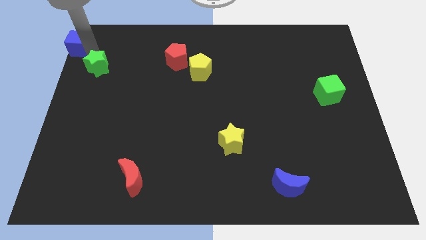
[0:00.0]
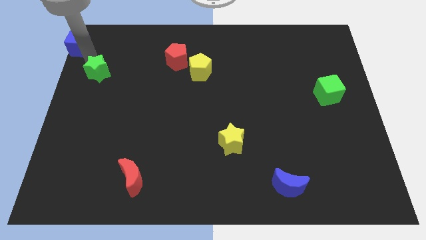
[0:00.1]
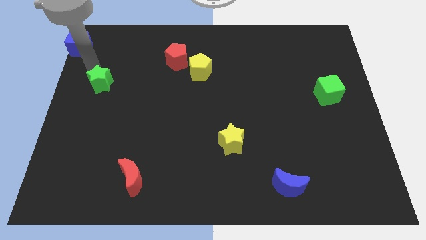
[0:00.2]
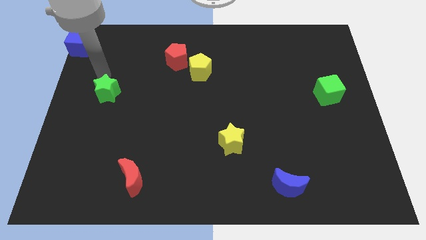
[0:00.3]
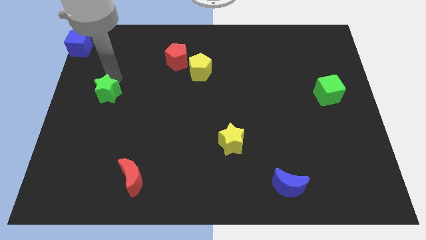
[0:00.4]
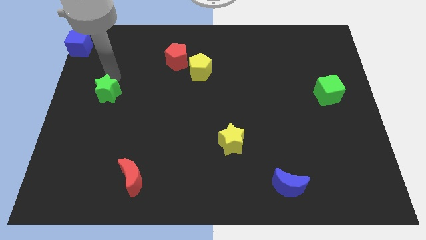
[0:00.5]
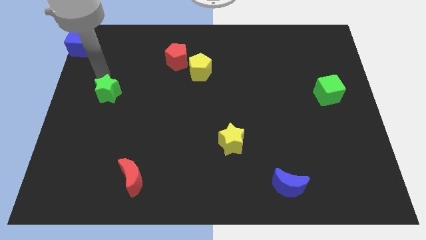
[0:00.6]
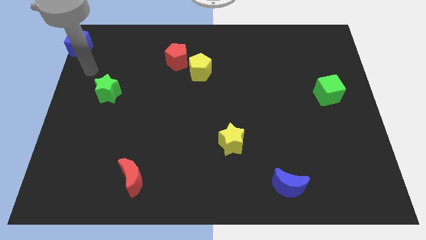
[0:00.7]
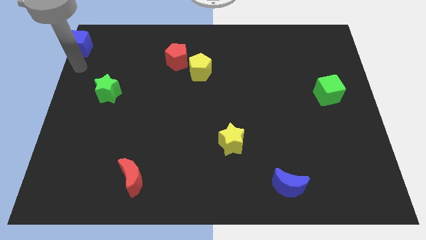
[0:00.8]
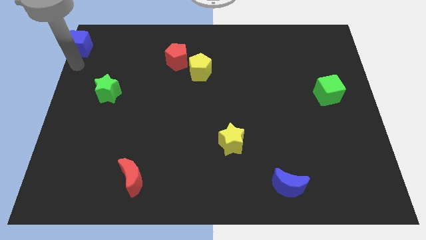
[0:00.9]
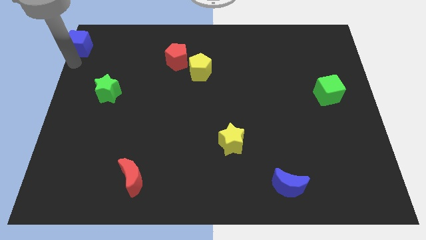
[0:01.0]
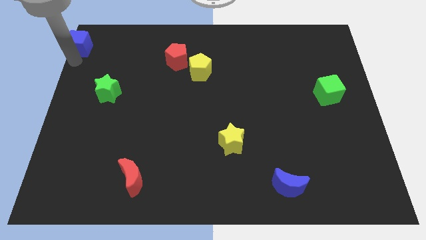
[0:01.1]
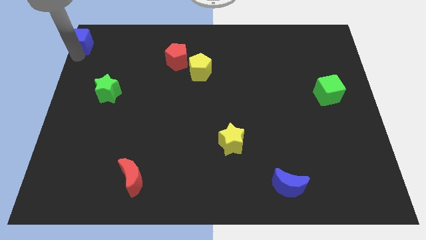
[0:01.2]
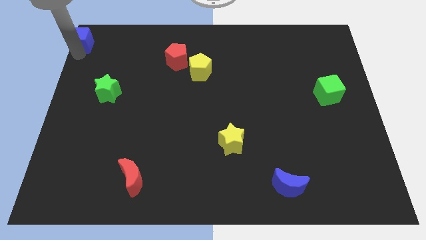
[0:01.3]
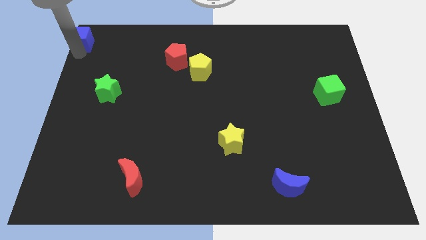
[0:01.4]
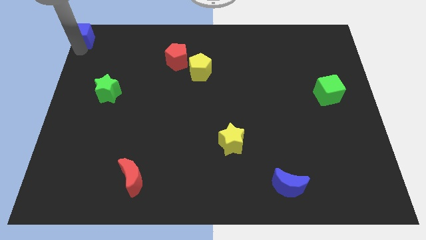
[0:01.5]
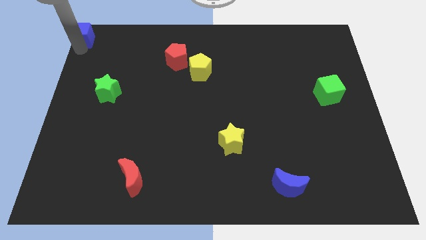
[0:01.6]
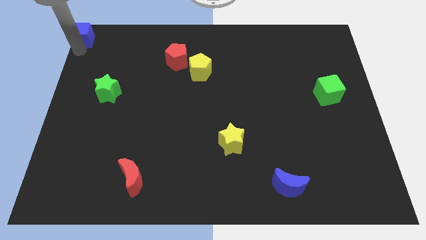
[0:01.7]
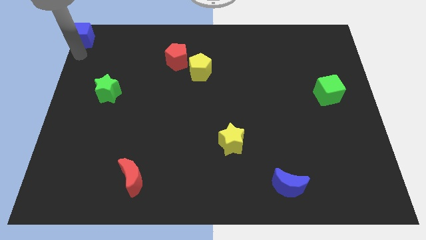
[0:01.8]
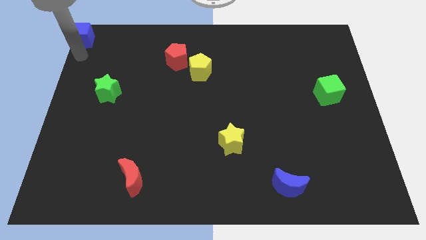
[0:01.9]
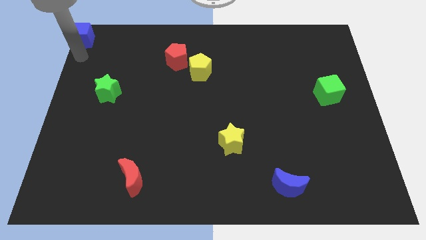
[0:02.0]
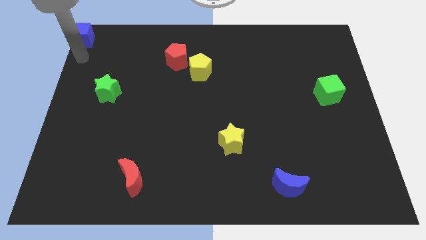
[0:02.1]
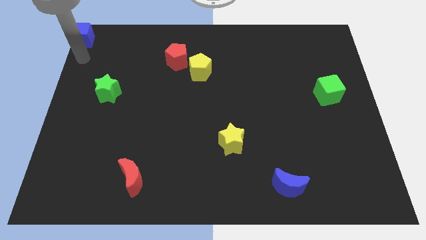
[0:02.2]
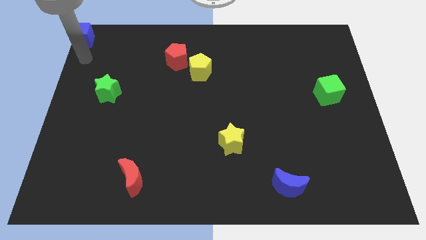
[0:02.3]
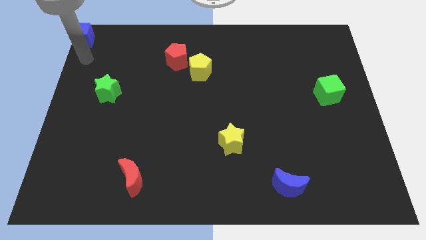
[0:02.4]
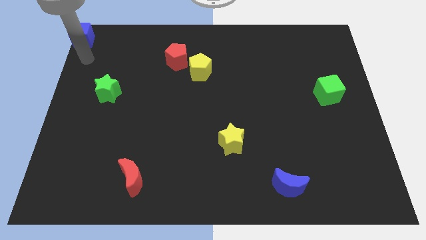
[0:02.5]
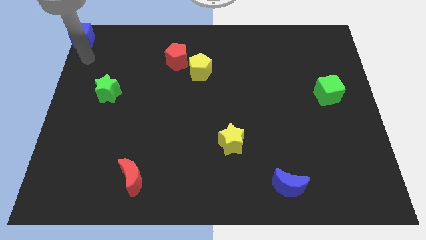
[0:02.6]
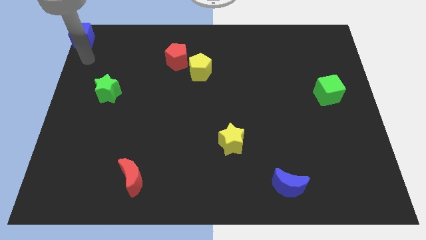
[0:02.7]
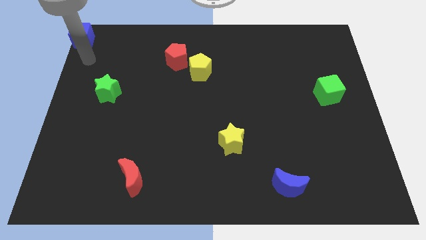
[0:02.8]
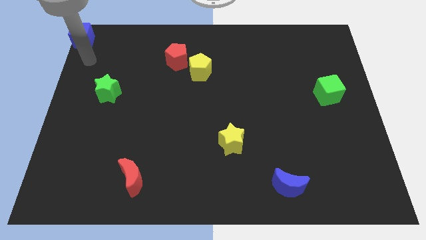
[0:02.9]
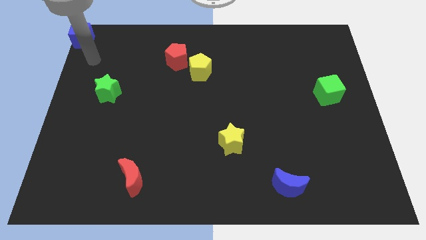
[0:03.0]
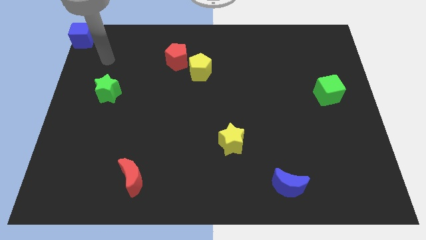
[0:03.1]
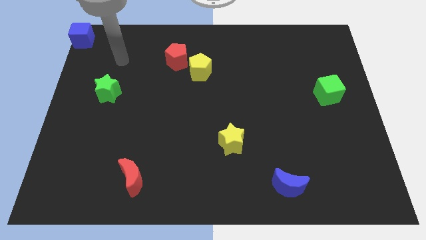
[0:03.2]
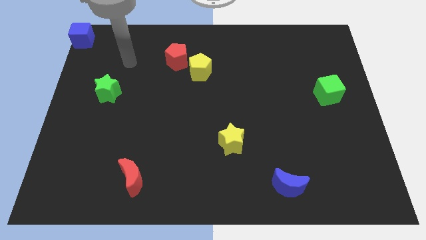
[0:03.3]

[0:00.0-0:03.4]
push the green star and blue cube in opposite directions

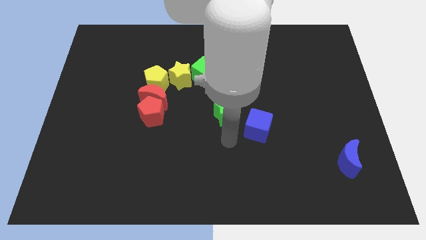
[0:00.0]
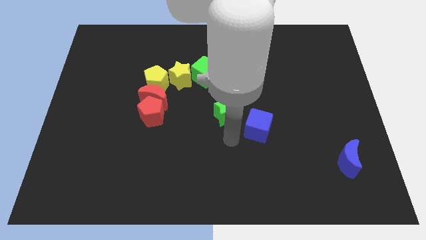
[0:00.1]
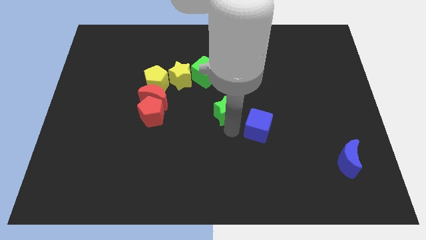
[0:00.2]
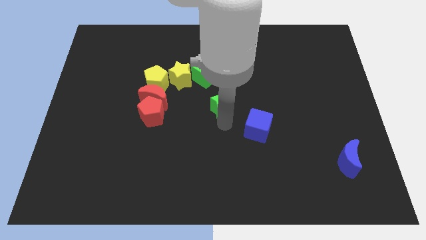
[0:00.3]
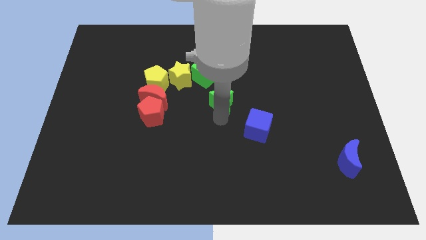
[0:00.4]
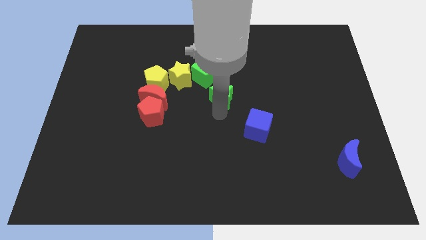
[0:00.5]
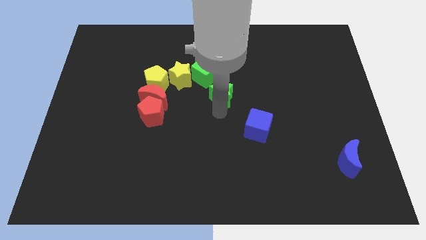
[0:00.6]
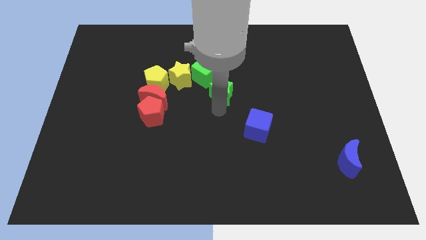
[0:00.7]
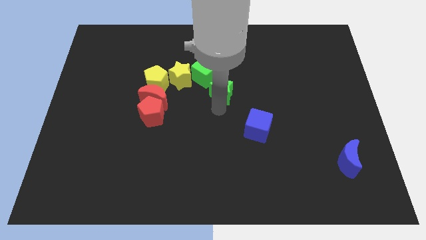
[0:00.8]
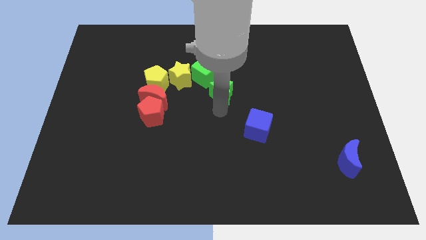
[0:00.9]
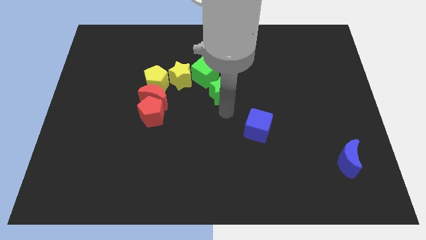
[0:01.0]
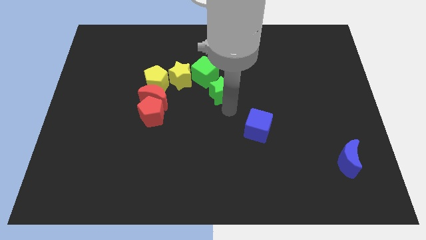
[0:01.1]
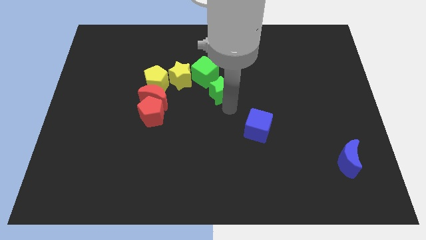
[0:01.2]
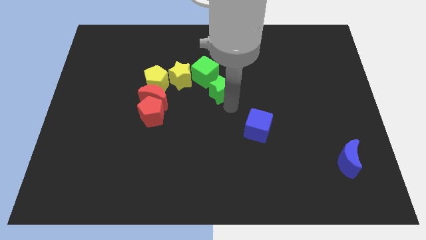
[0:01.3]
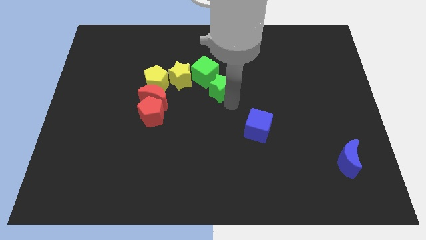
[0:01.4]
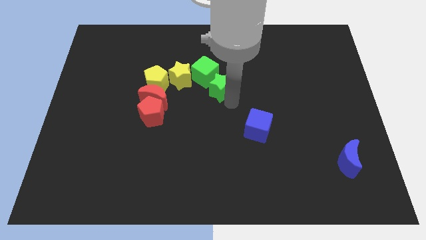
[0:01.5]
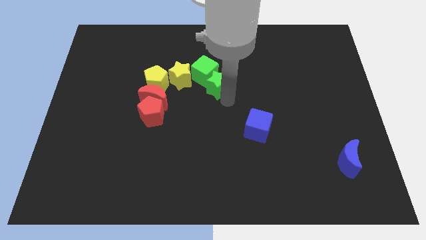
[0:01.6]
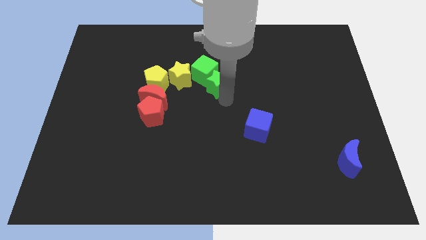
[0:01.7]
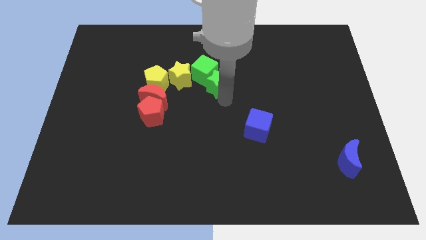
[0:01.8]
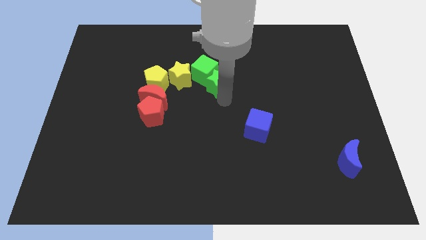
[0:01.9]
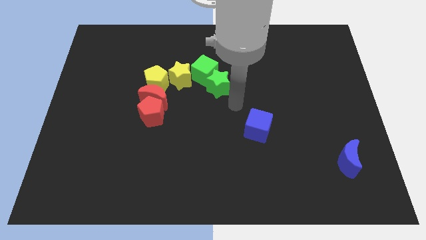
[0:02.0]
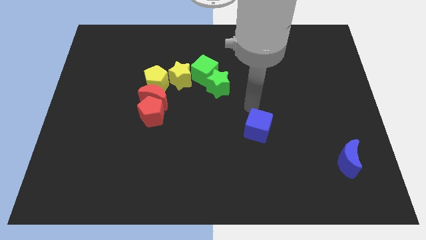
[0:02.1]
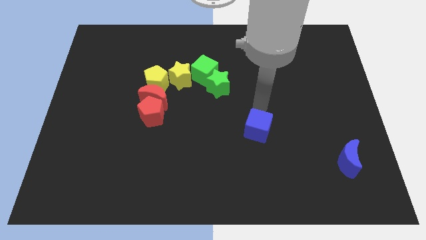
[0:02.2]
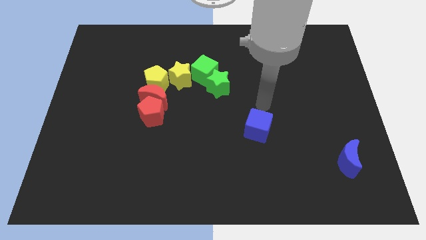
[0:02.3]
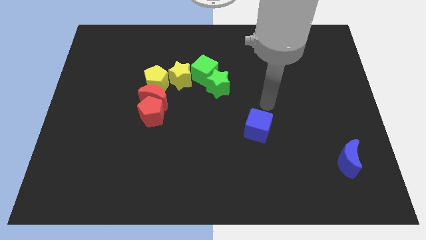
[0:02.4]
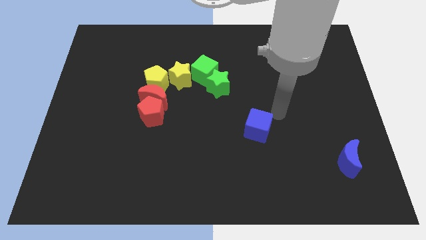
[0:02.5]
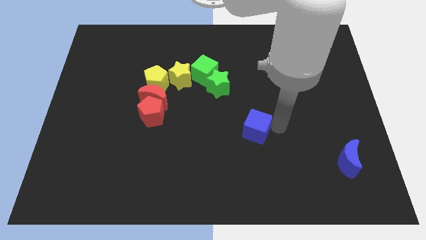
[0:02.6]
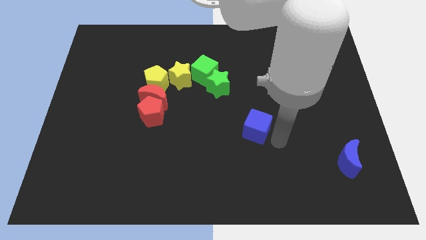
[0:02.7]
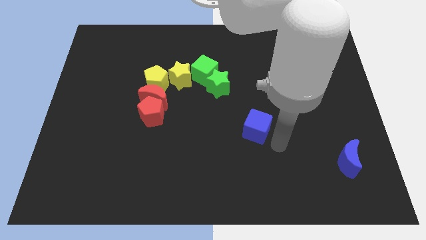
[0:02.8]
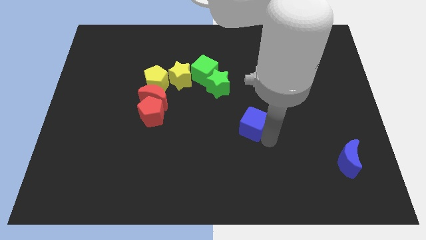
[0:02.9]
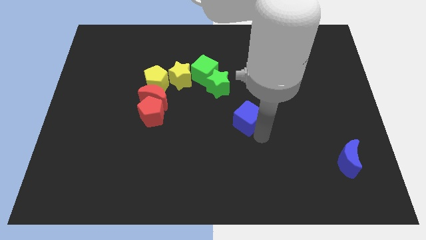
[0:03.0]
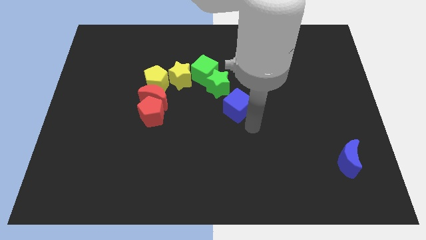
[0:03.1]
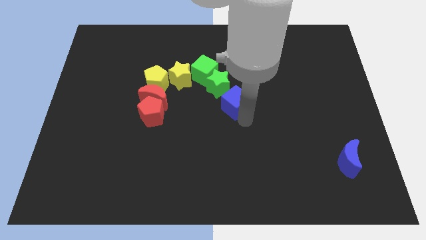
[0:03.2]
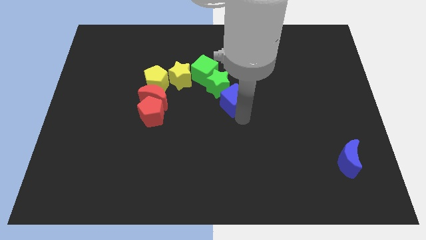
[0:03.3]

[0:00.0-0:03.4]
push blue cube to the center of the board

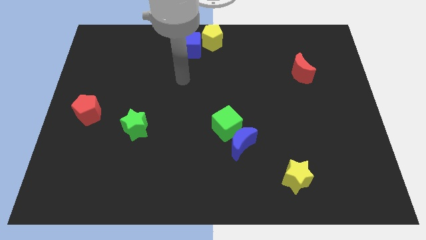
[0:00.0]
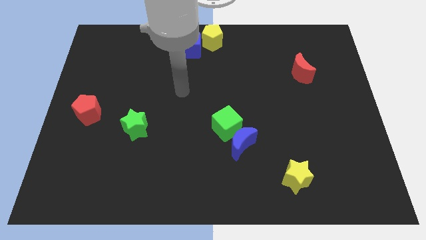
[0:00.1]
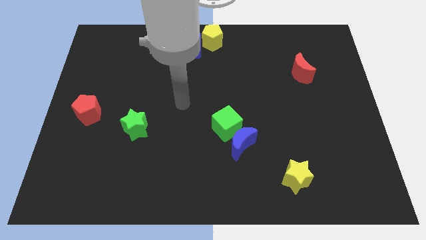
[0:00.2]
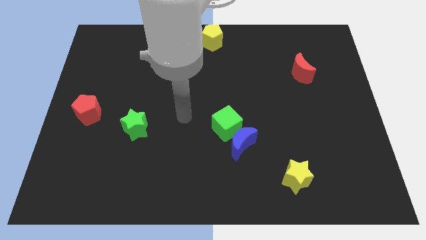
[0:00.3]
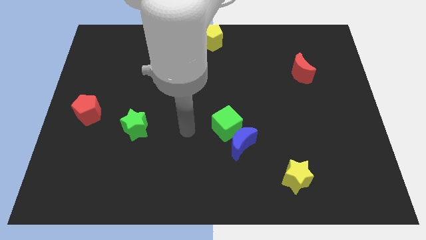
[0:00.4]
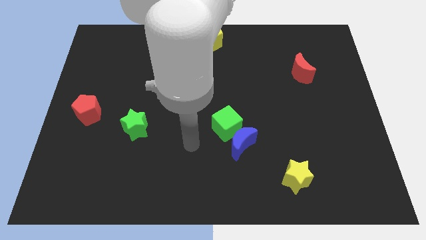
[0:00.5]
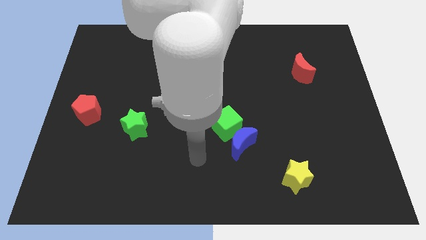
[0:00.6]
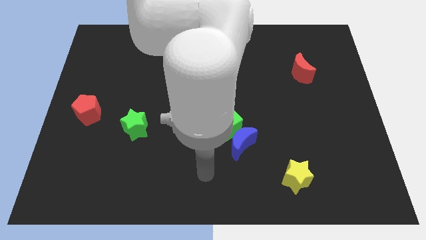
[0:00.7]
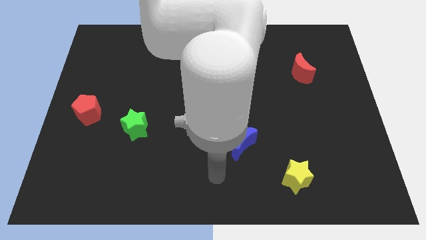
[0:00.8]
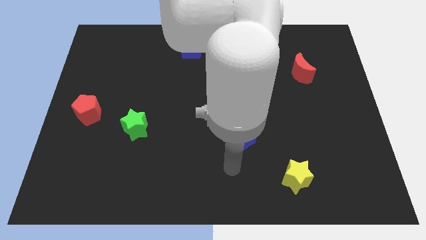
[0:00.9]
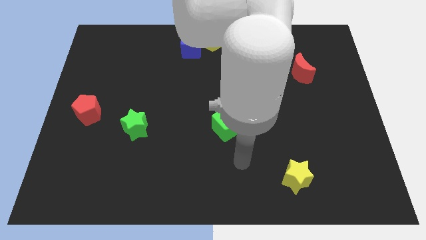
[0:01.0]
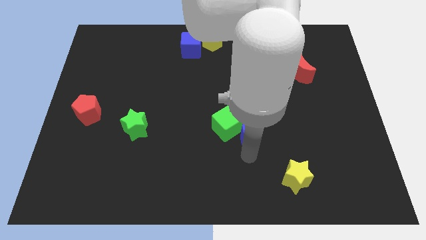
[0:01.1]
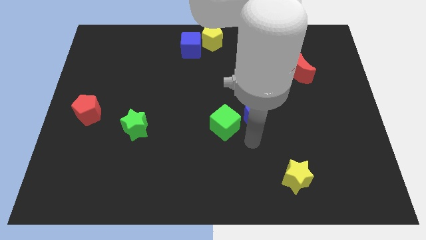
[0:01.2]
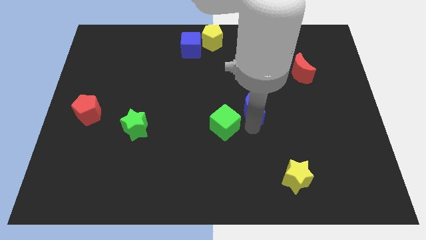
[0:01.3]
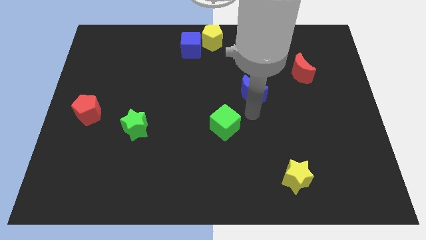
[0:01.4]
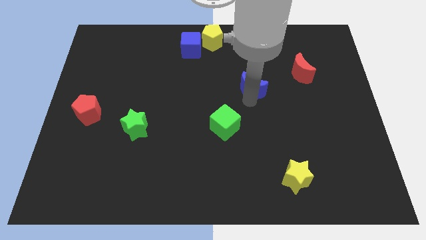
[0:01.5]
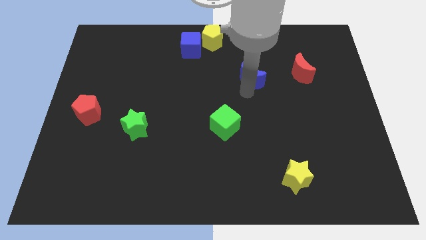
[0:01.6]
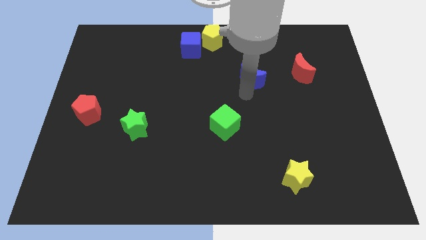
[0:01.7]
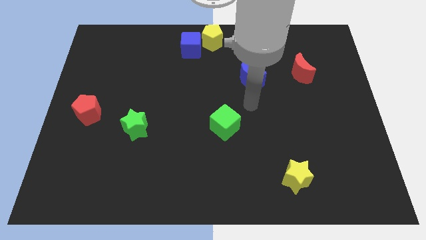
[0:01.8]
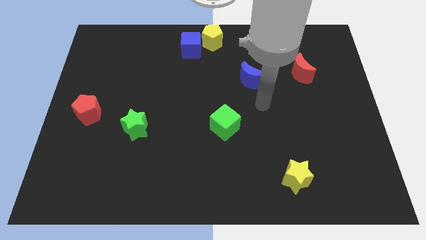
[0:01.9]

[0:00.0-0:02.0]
separate blue moon from the green cube

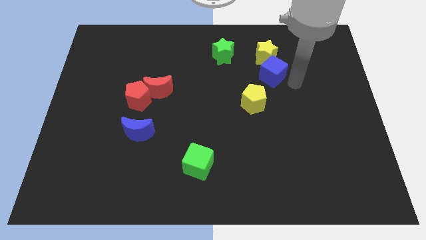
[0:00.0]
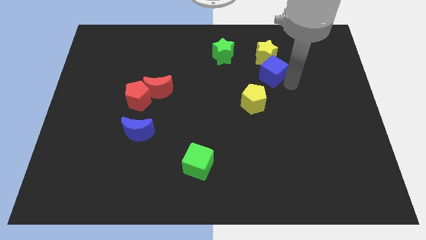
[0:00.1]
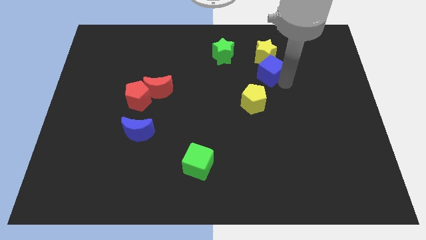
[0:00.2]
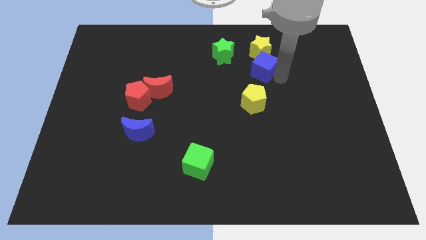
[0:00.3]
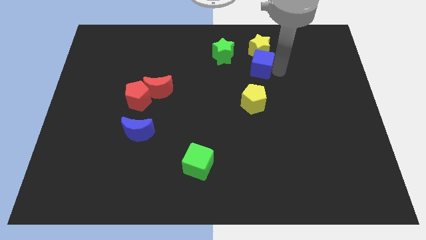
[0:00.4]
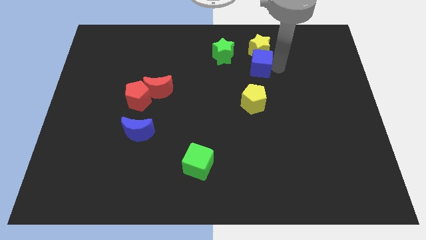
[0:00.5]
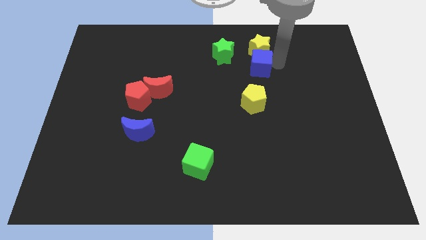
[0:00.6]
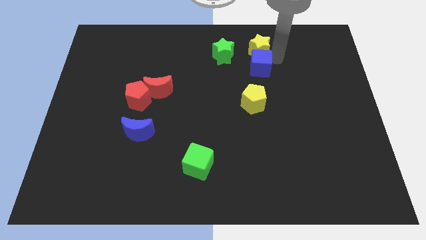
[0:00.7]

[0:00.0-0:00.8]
place blue cube below yellow star
